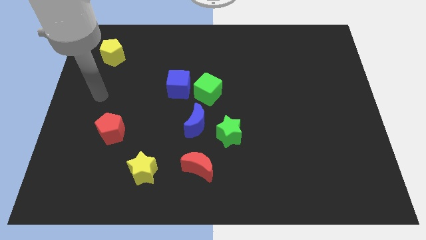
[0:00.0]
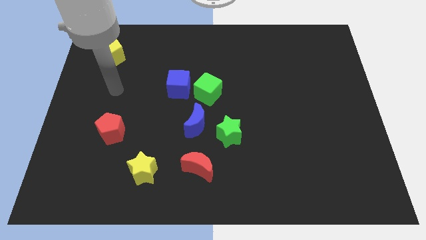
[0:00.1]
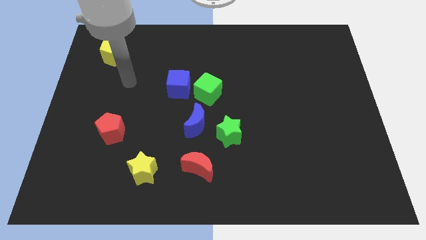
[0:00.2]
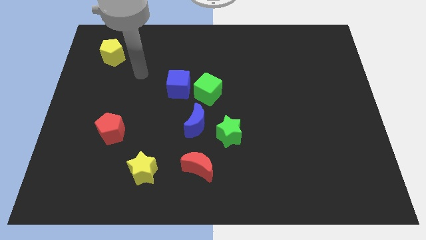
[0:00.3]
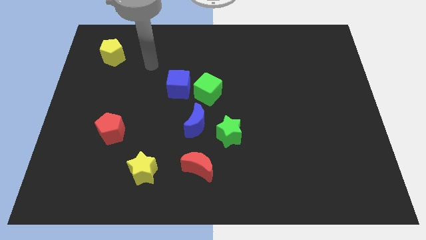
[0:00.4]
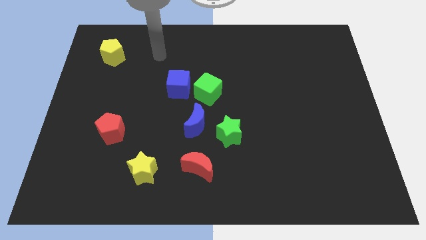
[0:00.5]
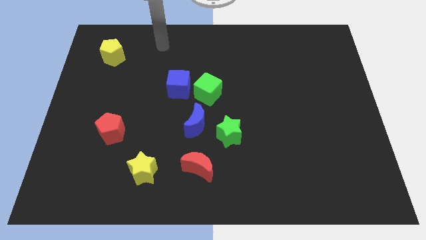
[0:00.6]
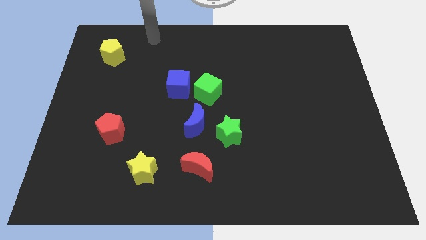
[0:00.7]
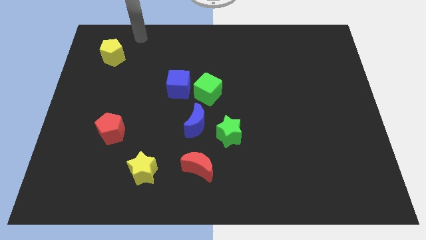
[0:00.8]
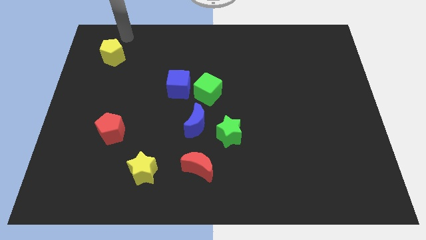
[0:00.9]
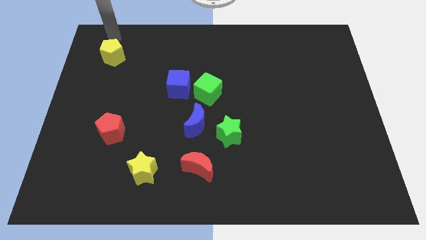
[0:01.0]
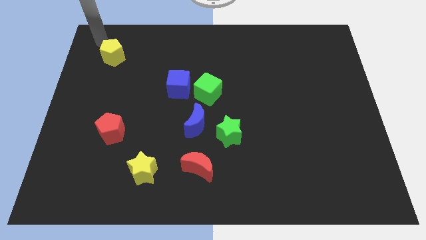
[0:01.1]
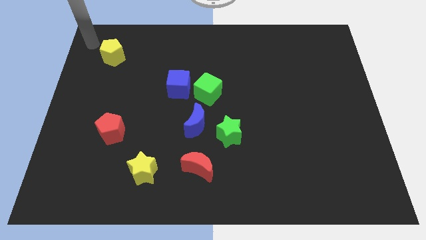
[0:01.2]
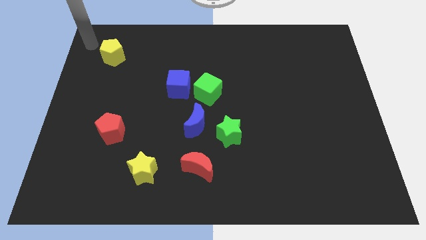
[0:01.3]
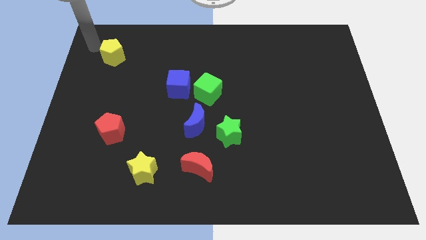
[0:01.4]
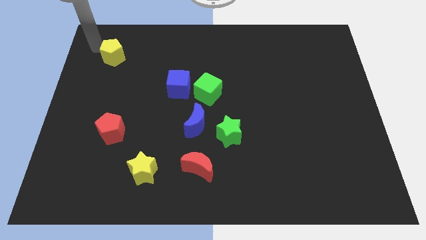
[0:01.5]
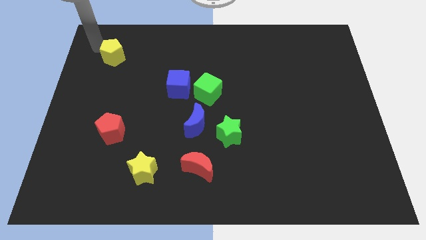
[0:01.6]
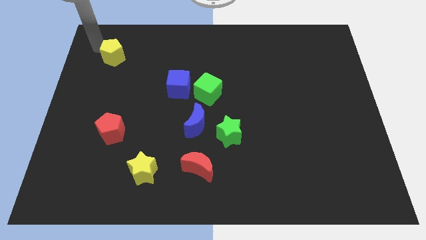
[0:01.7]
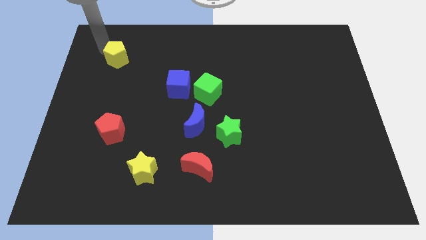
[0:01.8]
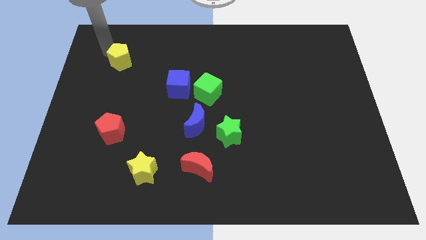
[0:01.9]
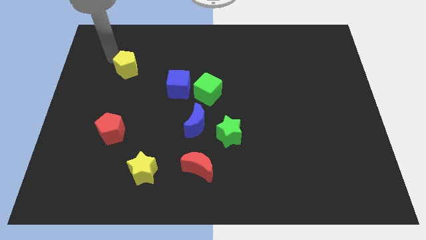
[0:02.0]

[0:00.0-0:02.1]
move the yellow pentagon diagonally to the blue cube

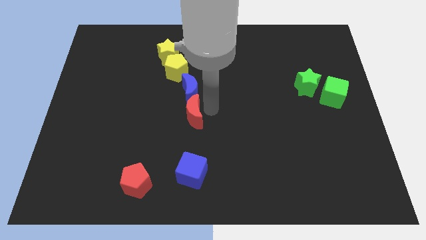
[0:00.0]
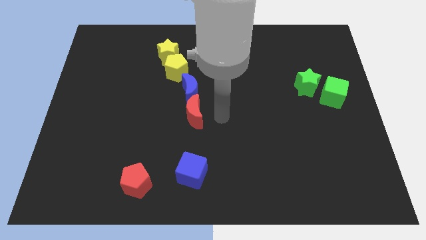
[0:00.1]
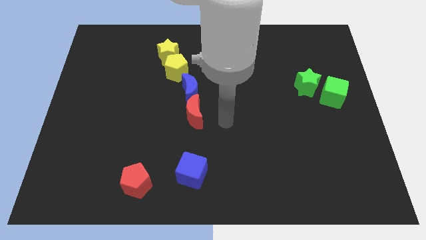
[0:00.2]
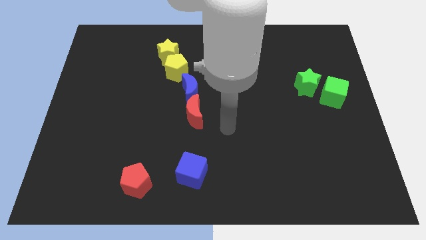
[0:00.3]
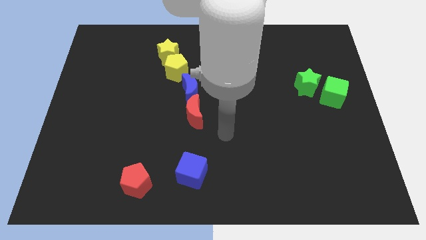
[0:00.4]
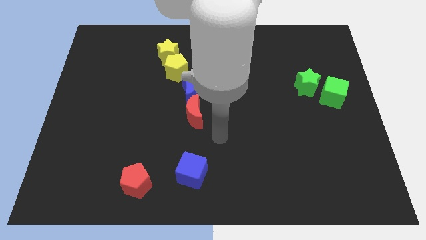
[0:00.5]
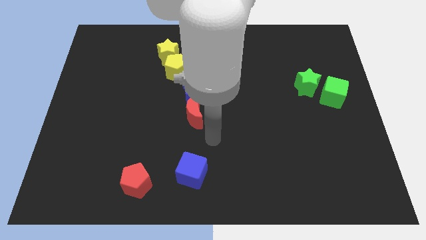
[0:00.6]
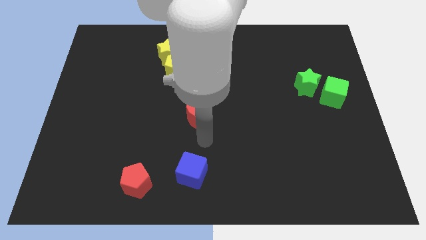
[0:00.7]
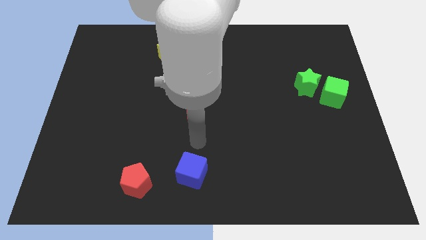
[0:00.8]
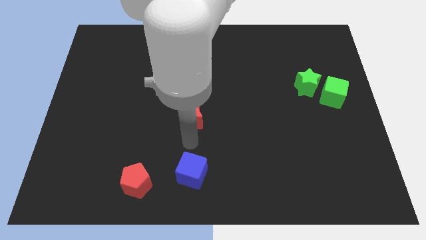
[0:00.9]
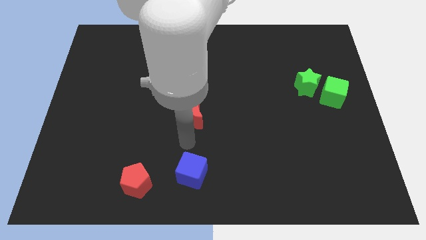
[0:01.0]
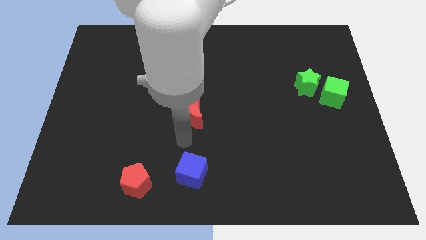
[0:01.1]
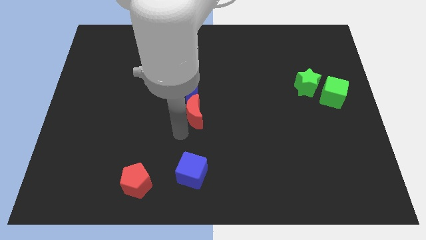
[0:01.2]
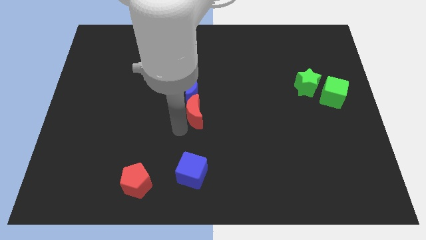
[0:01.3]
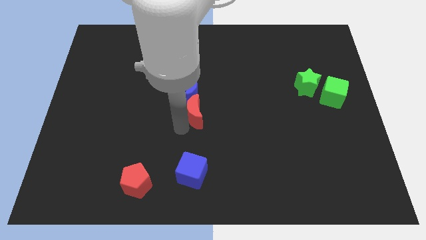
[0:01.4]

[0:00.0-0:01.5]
point your arm to the left side of the red crescent

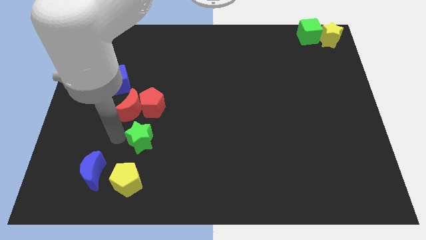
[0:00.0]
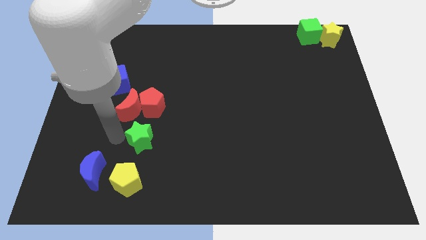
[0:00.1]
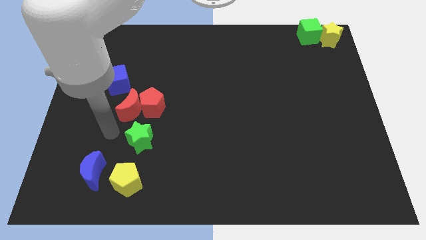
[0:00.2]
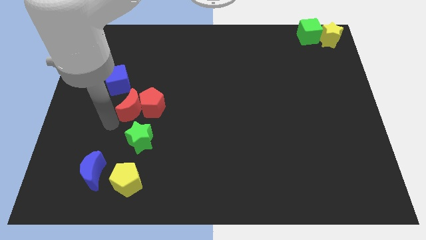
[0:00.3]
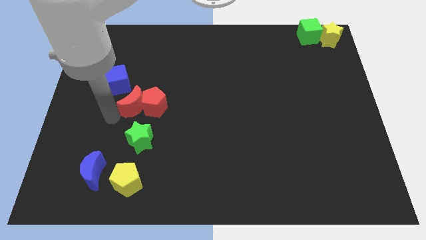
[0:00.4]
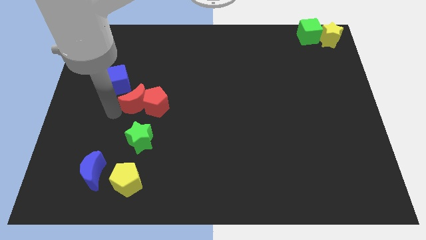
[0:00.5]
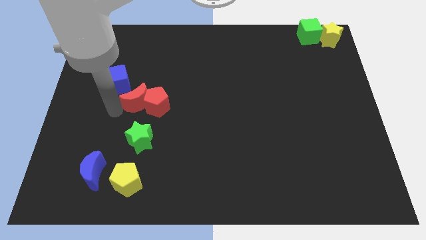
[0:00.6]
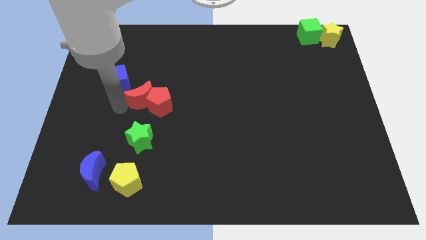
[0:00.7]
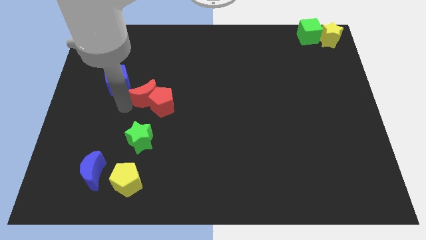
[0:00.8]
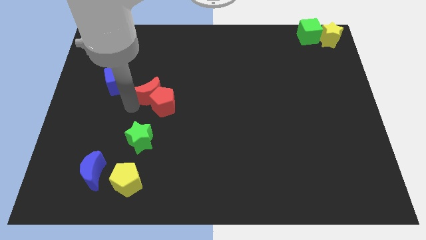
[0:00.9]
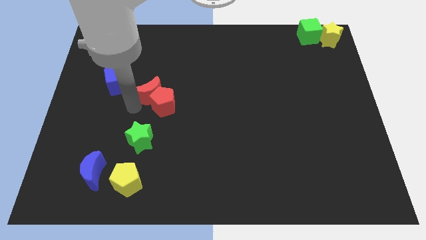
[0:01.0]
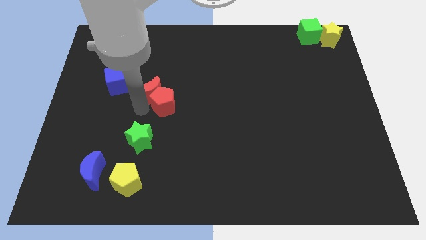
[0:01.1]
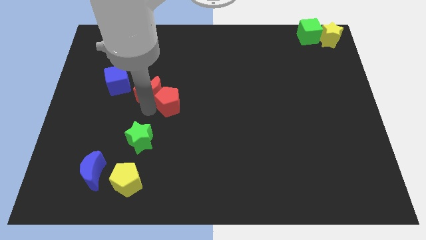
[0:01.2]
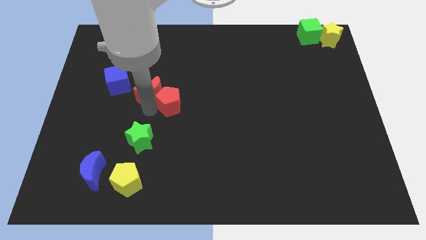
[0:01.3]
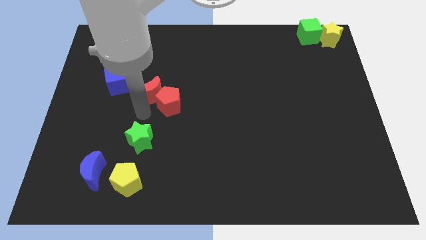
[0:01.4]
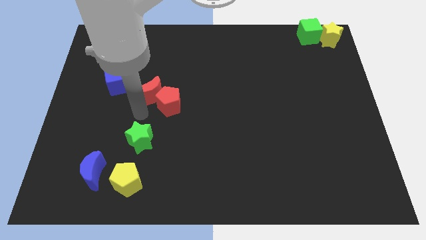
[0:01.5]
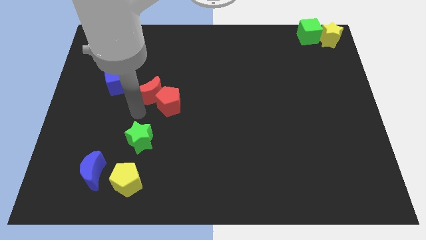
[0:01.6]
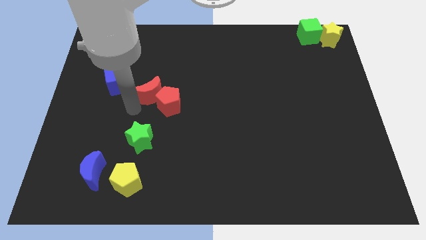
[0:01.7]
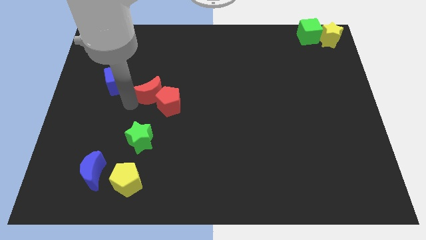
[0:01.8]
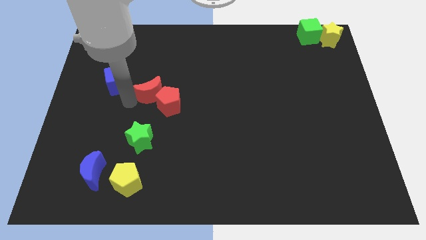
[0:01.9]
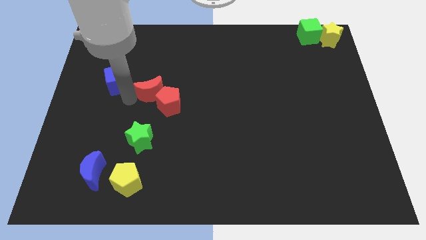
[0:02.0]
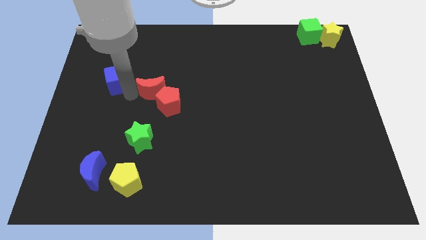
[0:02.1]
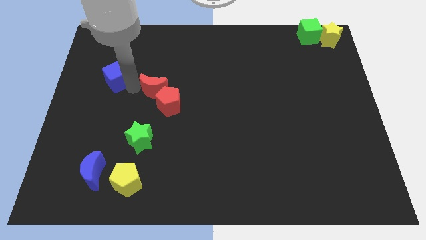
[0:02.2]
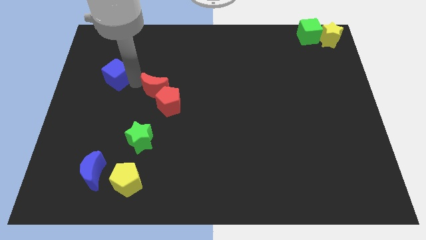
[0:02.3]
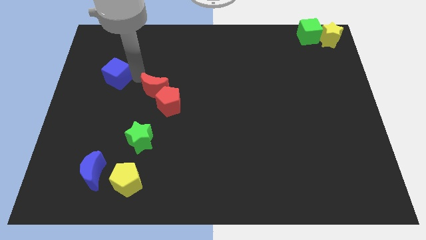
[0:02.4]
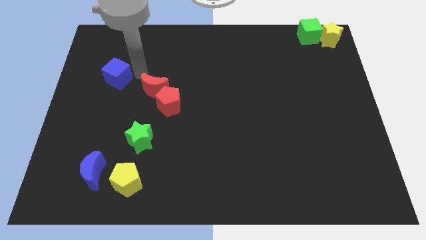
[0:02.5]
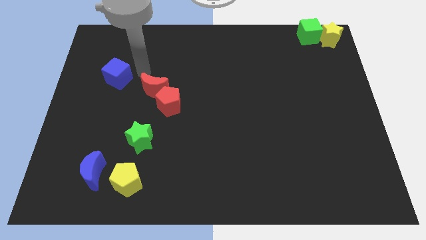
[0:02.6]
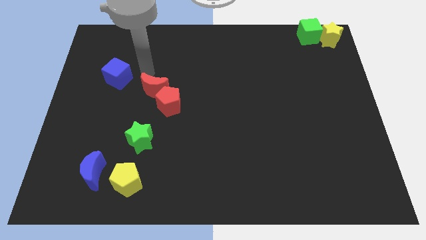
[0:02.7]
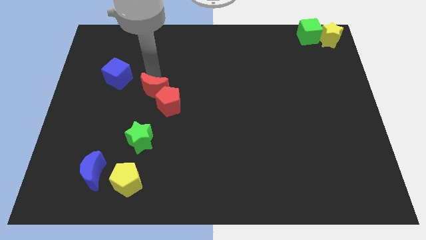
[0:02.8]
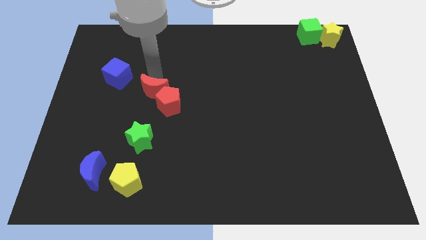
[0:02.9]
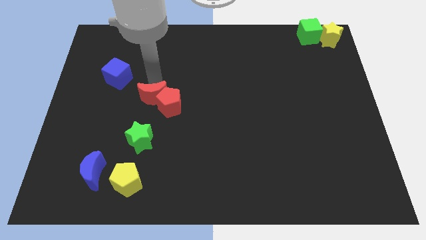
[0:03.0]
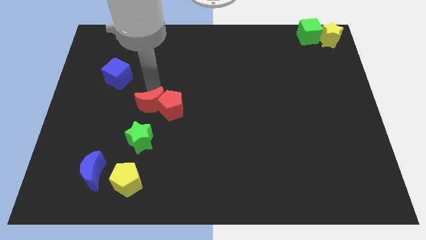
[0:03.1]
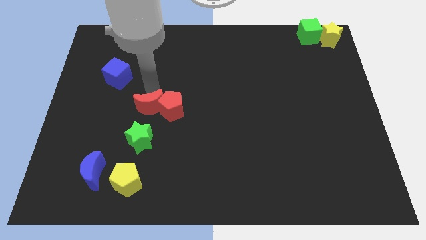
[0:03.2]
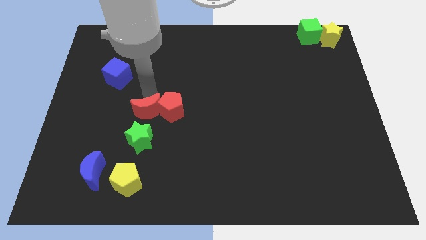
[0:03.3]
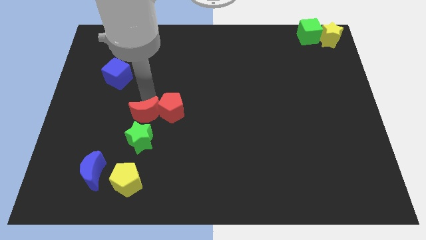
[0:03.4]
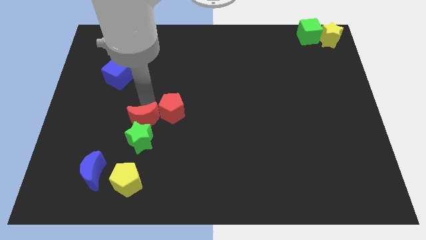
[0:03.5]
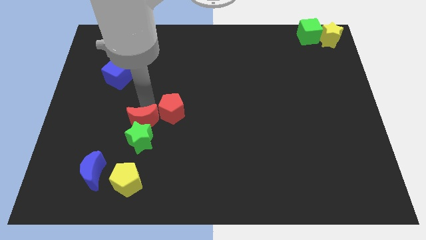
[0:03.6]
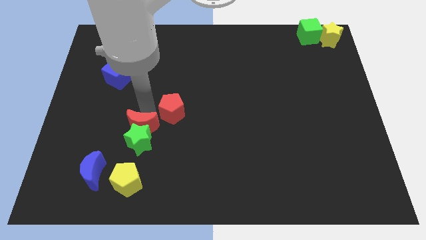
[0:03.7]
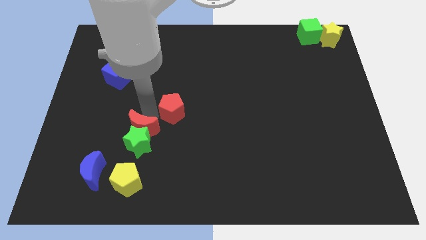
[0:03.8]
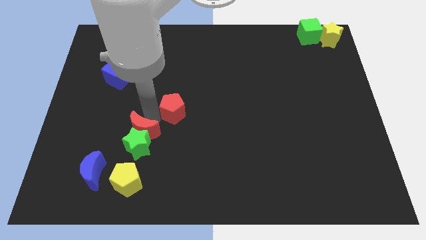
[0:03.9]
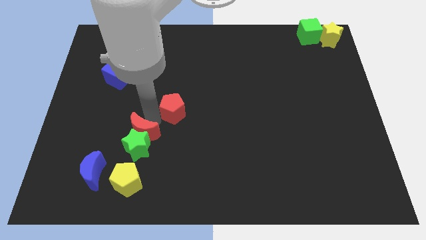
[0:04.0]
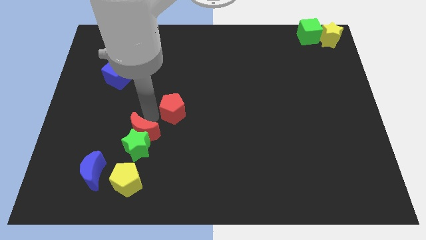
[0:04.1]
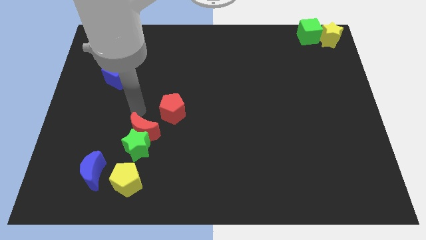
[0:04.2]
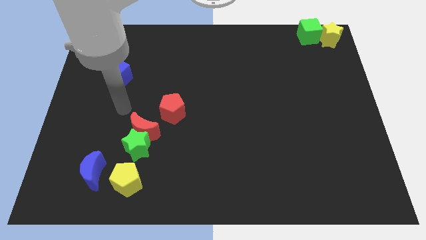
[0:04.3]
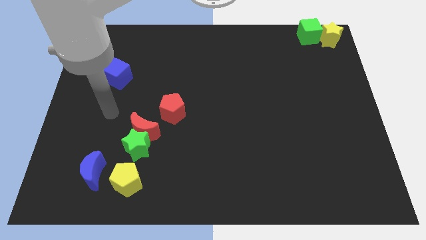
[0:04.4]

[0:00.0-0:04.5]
move the red moon into the green star

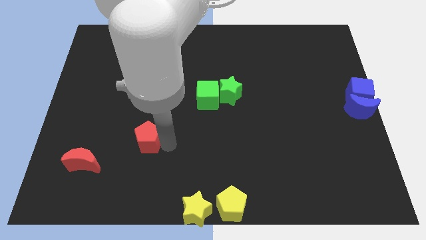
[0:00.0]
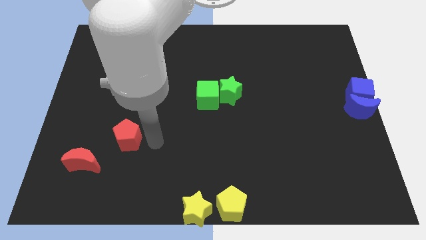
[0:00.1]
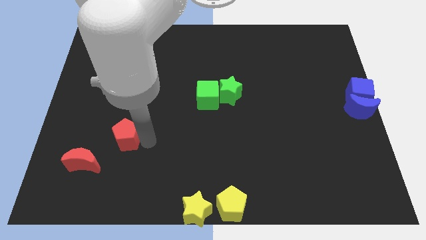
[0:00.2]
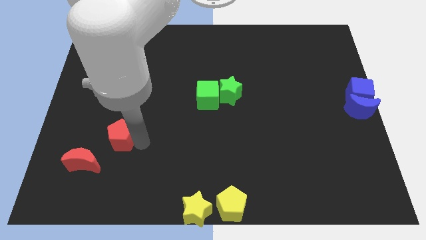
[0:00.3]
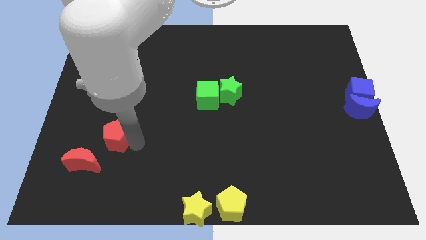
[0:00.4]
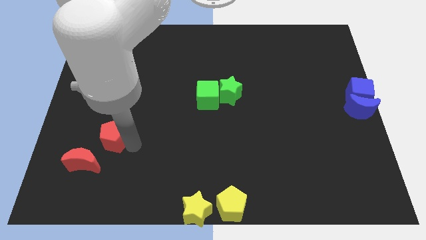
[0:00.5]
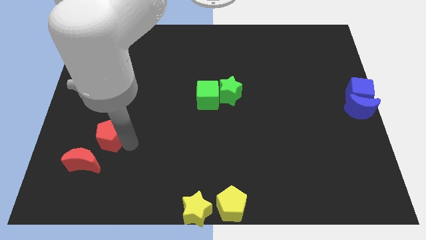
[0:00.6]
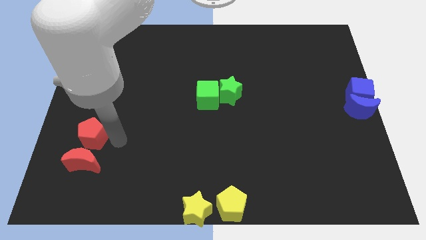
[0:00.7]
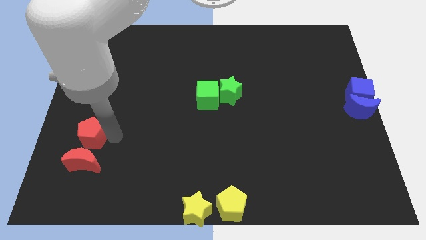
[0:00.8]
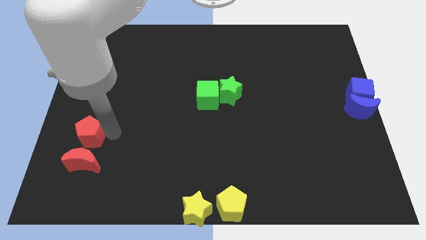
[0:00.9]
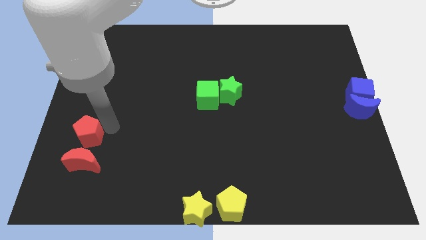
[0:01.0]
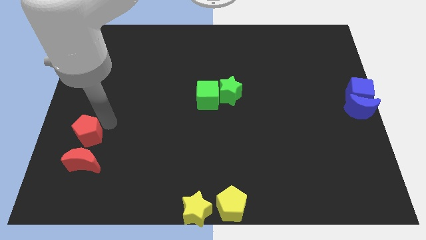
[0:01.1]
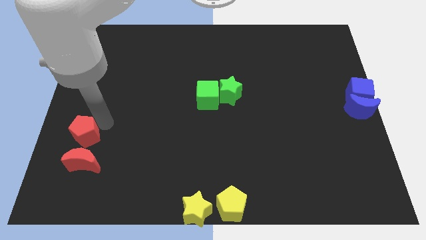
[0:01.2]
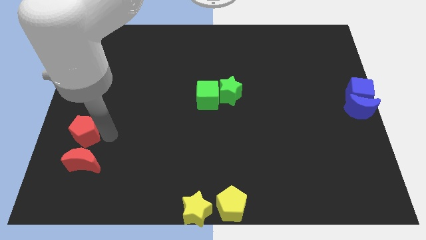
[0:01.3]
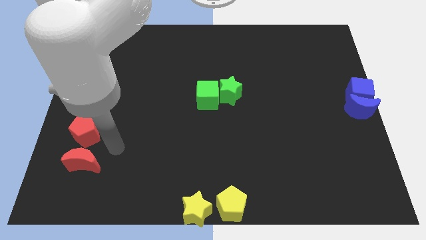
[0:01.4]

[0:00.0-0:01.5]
move the red pentagon on the top of the red crescent on the board
